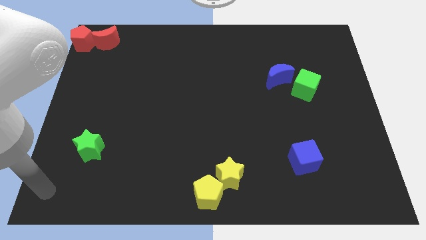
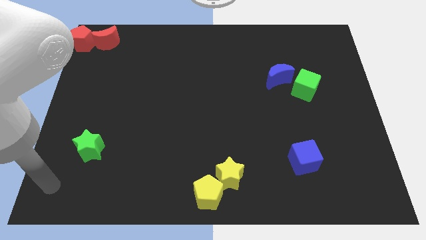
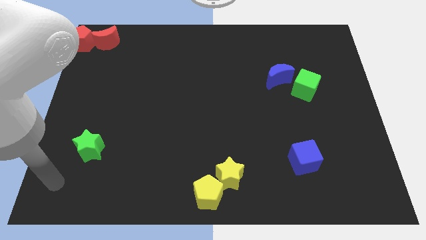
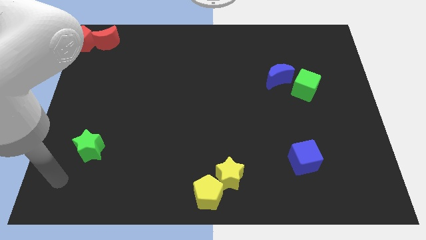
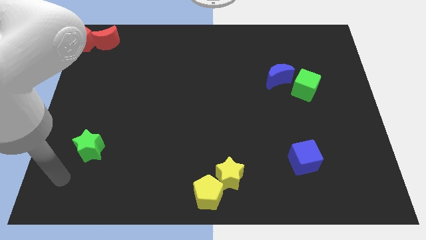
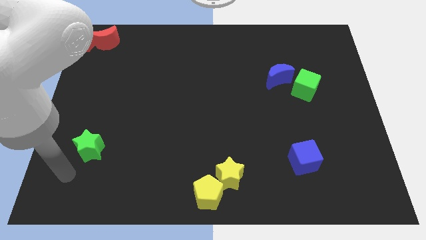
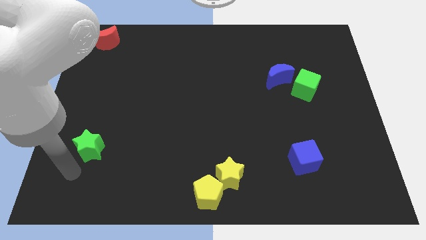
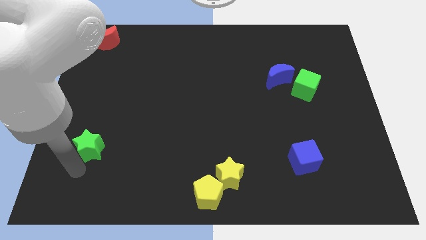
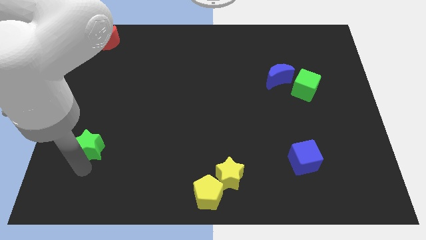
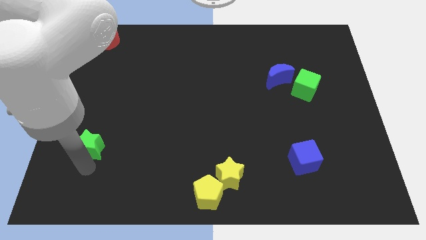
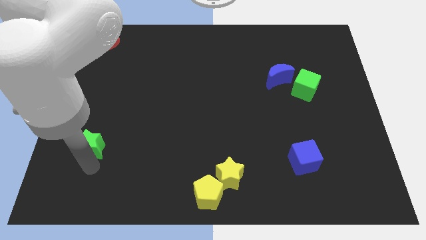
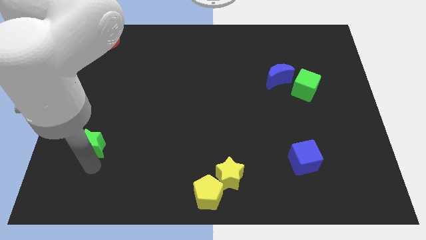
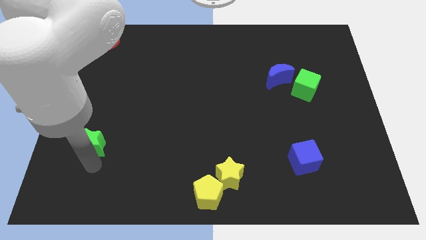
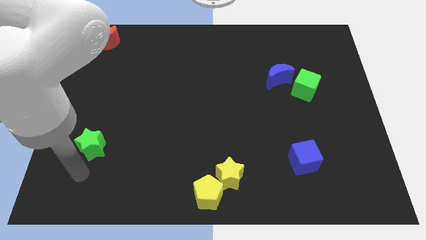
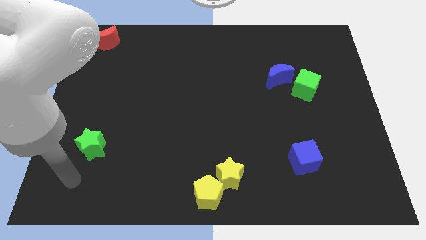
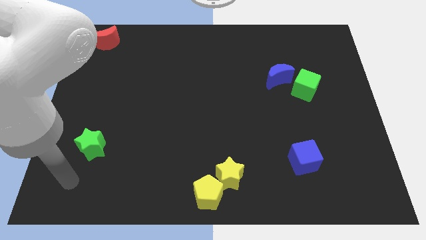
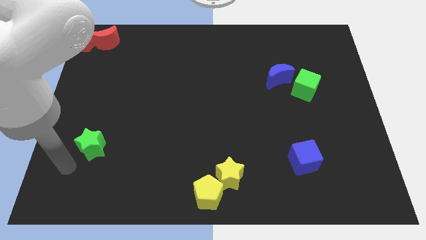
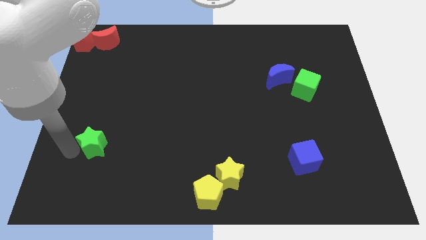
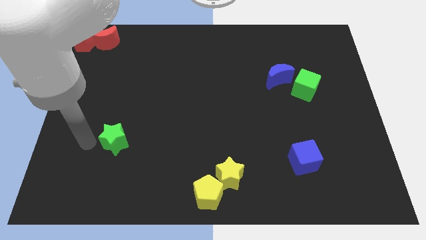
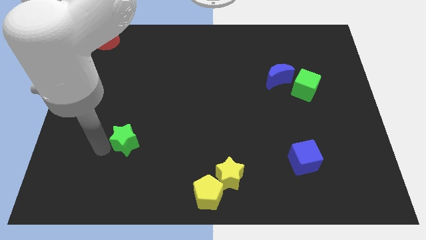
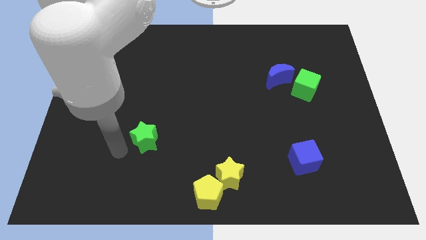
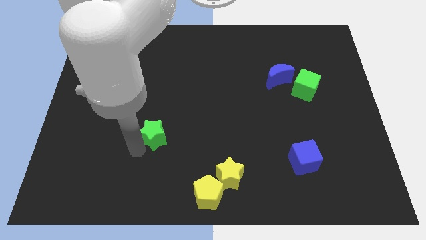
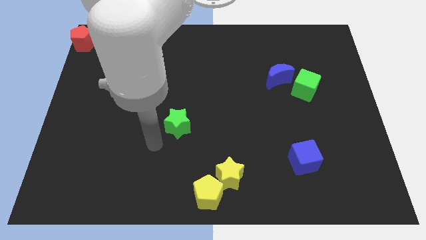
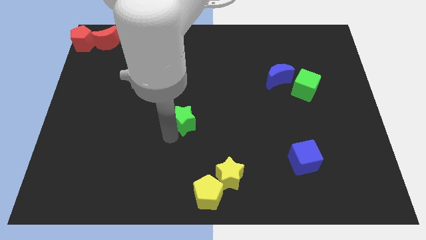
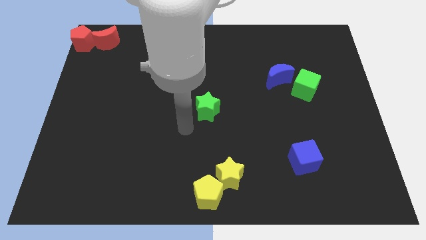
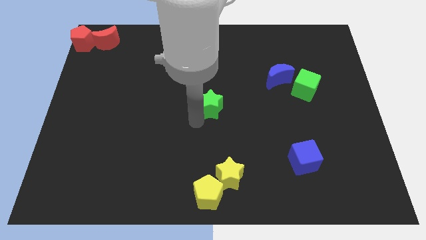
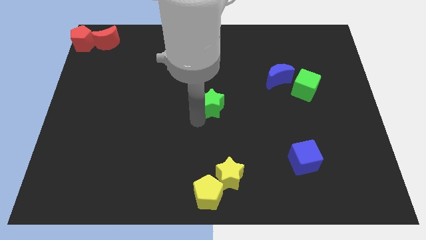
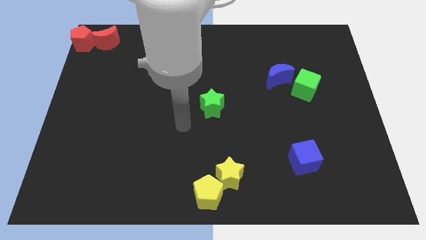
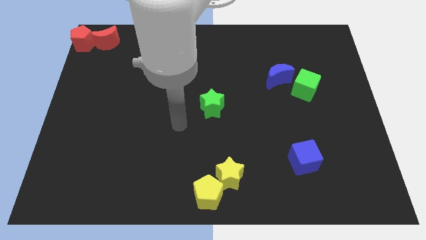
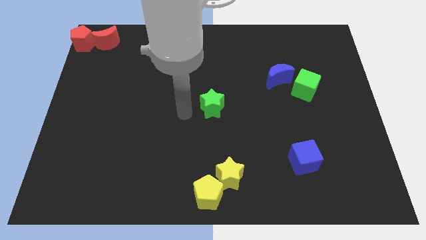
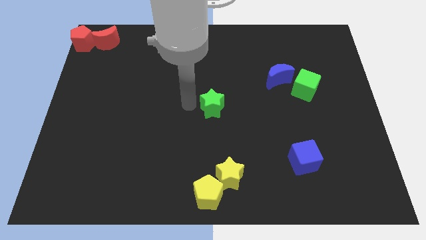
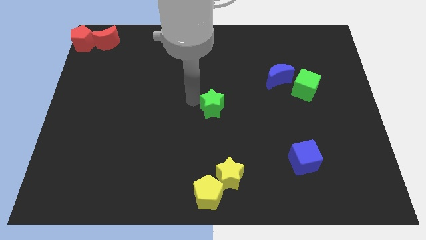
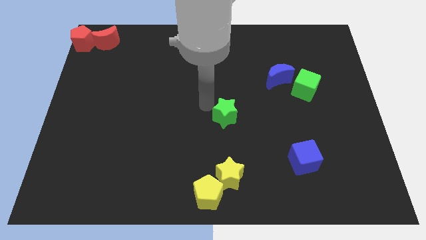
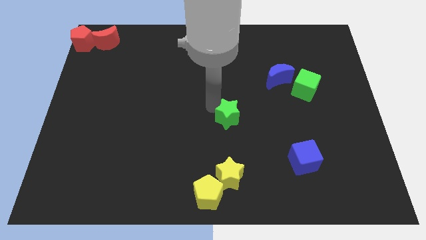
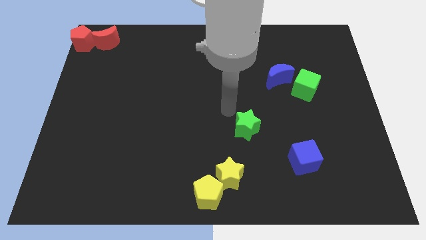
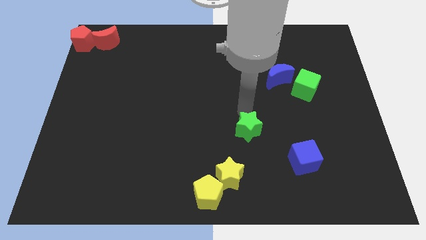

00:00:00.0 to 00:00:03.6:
place the green star diagonally top right to the yellow star

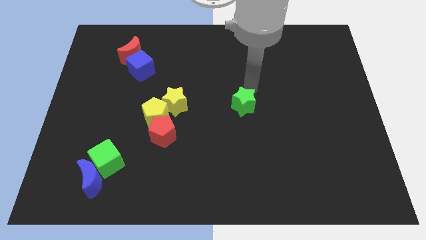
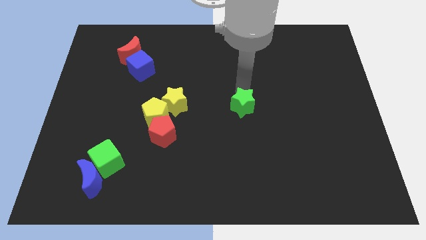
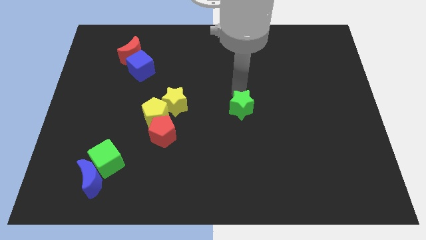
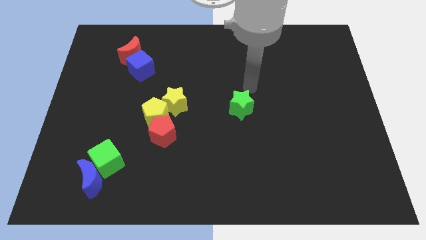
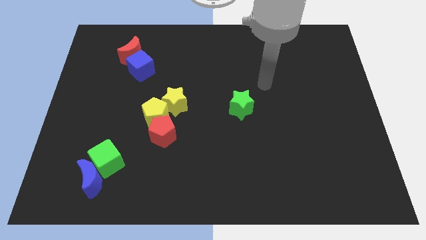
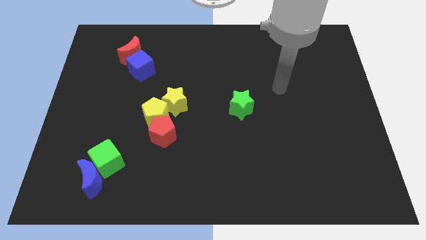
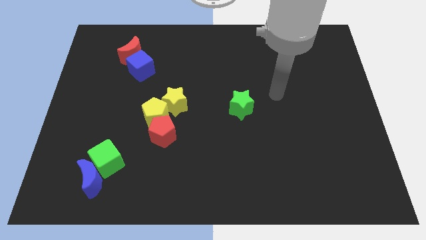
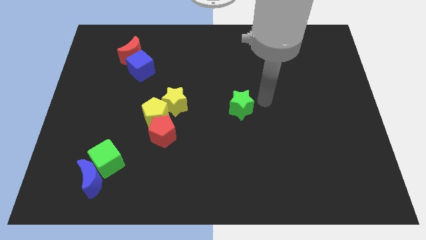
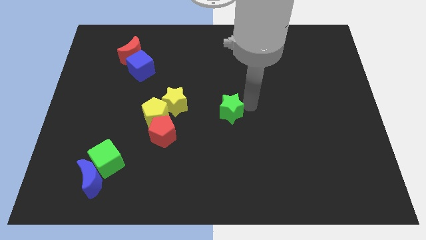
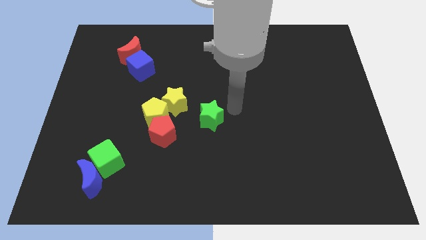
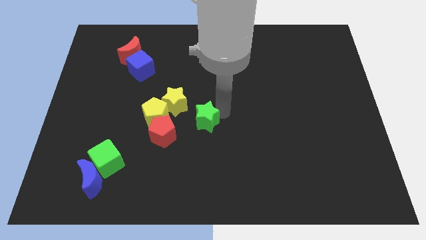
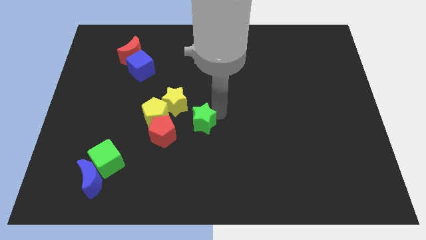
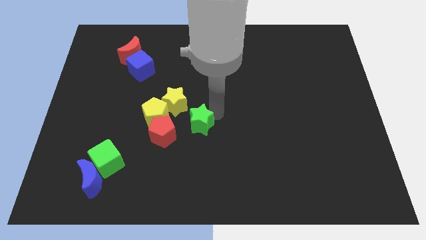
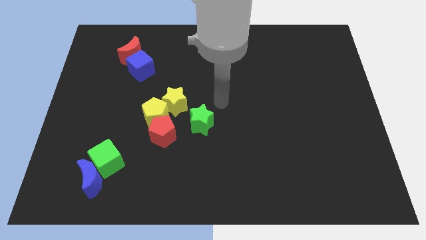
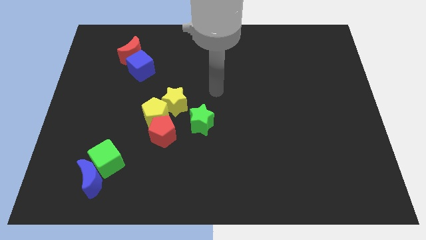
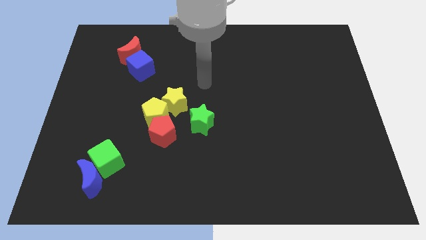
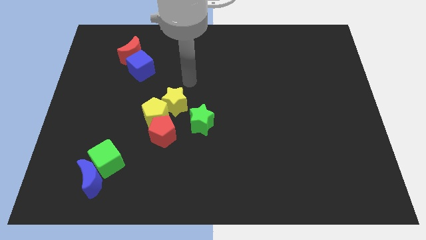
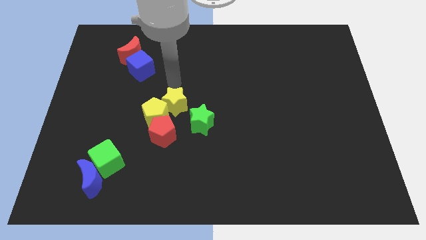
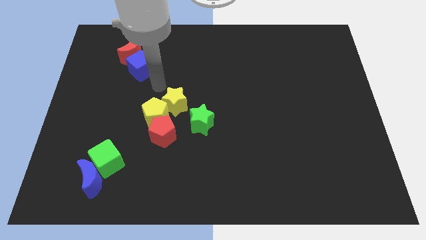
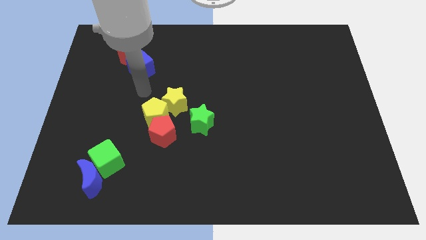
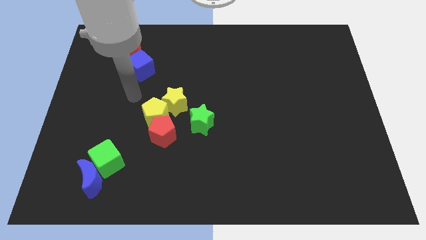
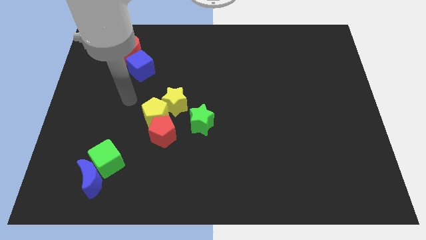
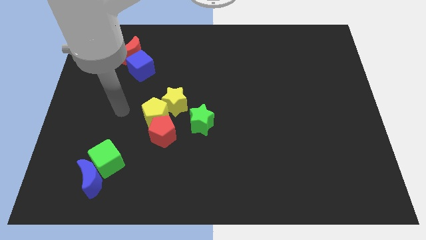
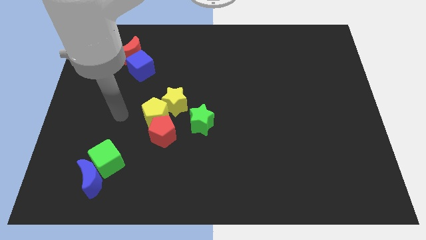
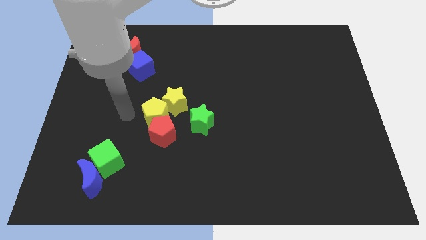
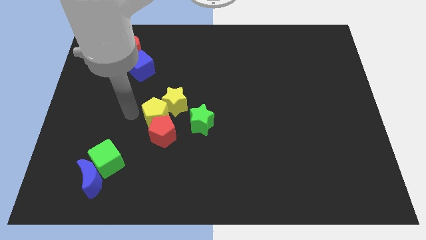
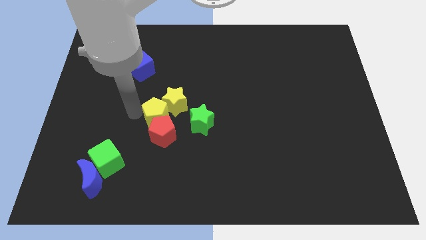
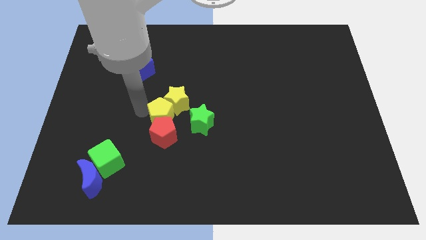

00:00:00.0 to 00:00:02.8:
slide the green star near the red pentagon

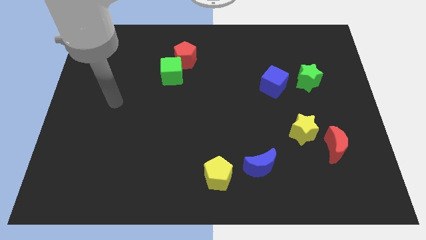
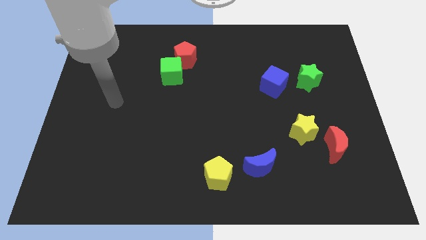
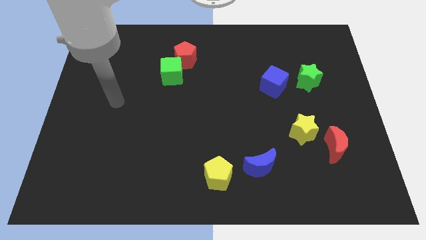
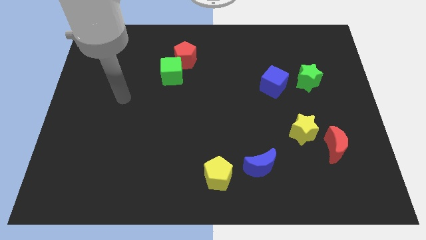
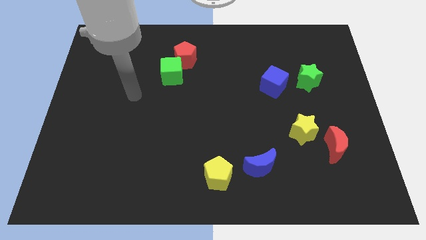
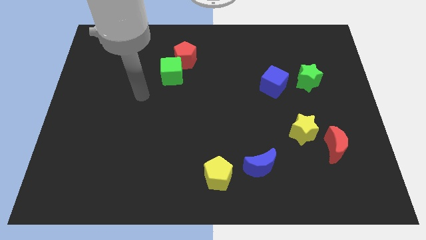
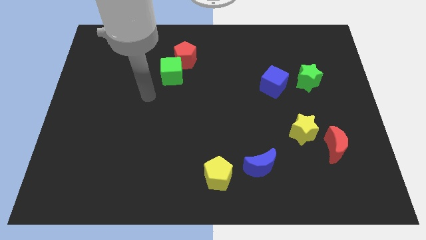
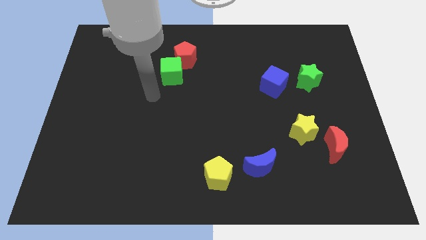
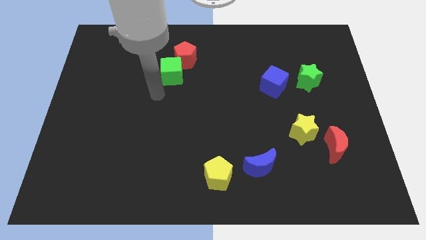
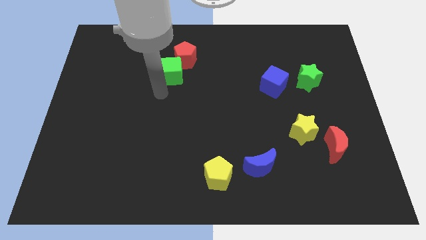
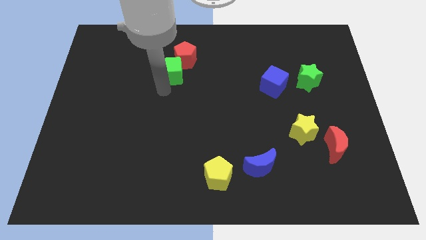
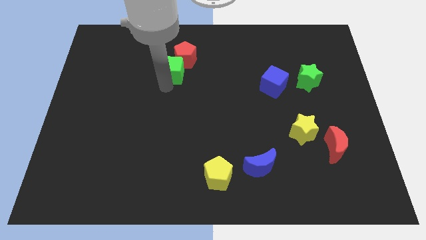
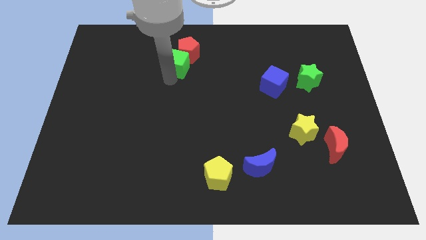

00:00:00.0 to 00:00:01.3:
point your arm at the bottom of the green cube

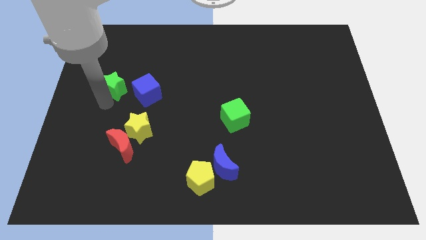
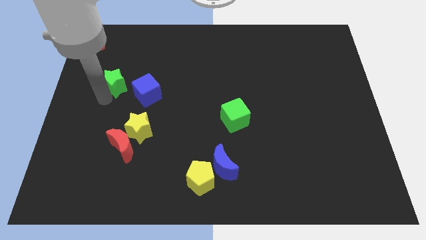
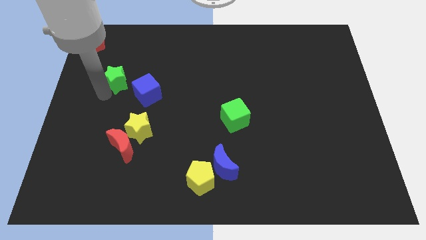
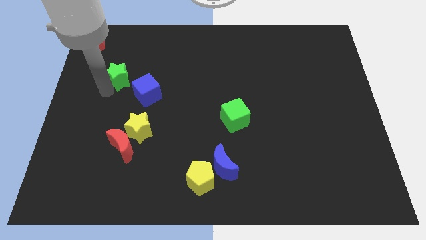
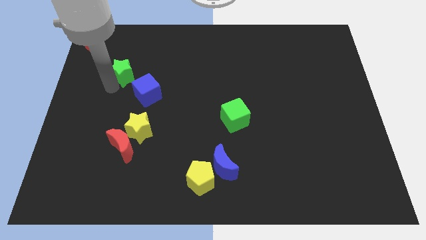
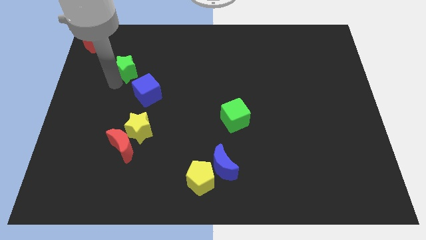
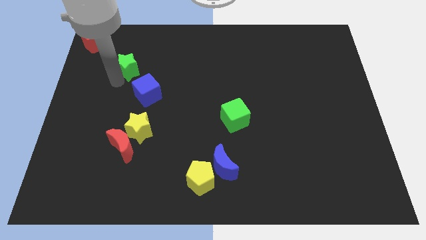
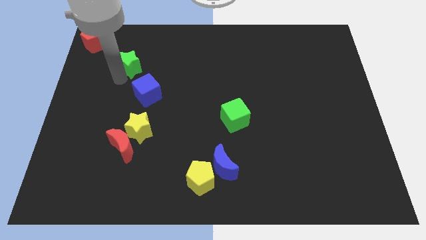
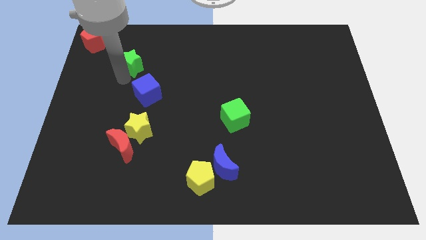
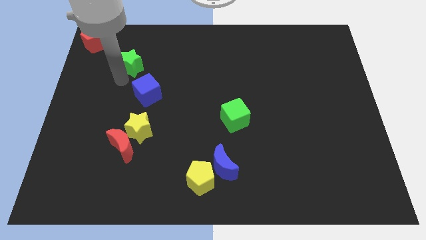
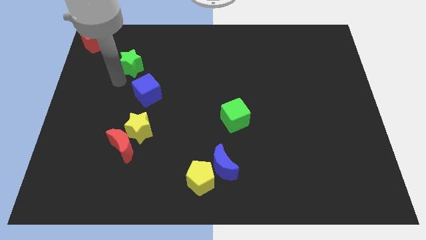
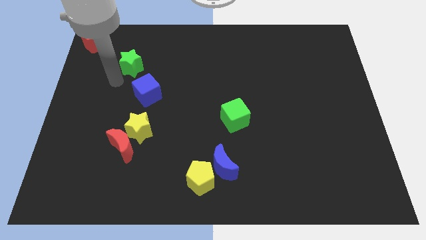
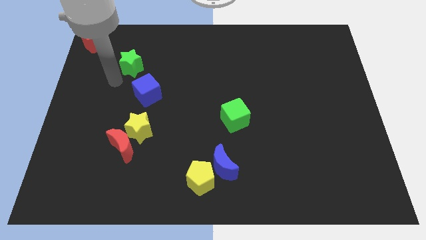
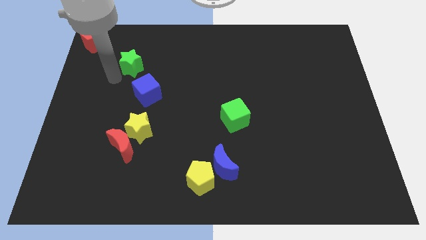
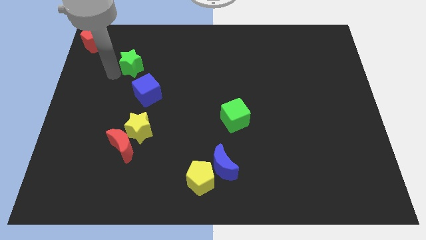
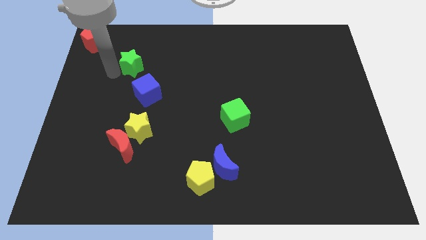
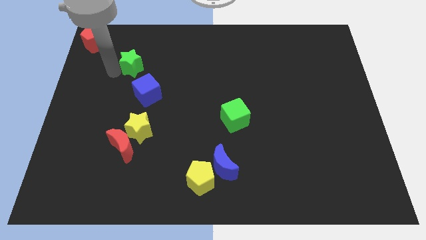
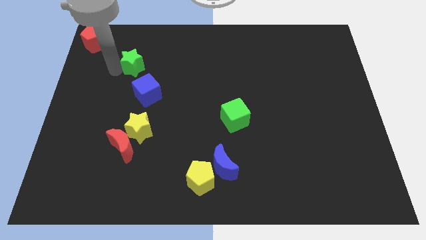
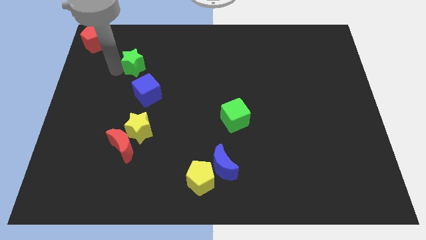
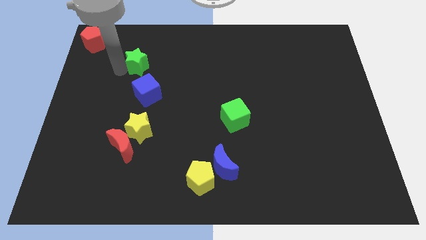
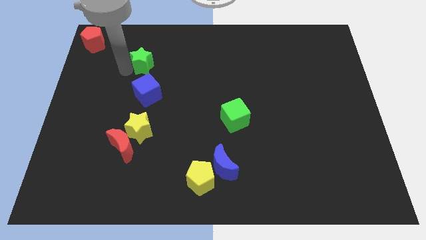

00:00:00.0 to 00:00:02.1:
slide green star to the top left of blue cube
